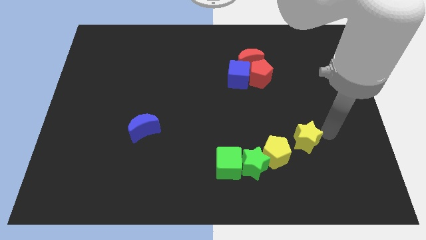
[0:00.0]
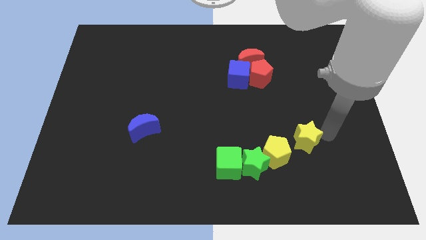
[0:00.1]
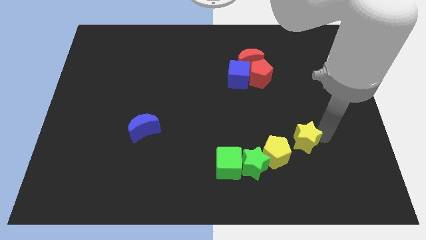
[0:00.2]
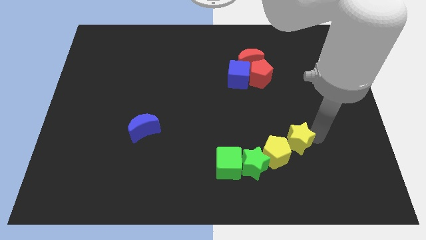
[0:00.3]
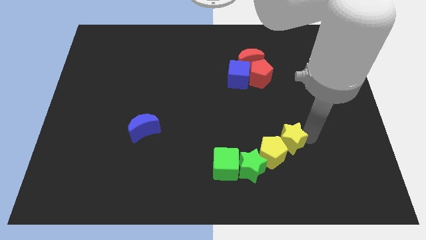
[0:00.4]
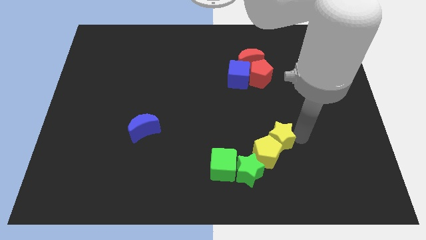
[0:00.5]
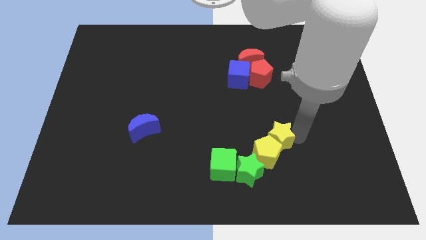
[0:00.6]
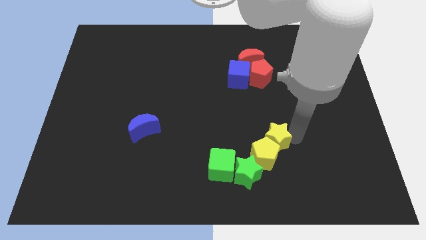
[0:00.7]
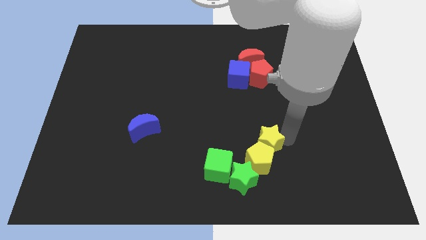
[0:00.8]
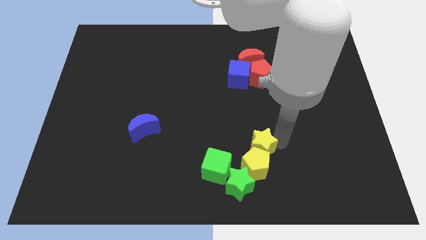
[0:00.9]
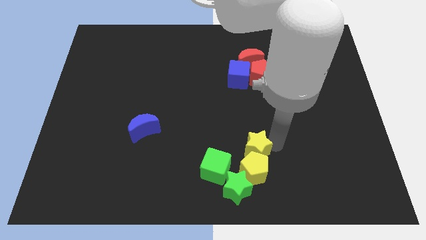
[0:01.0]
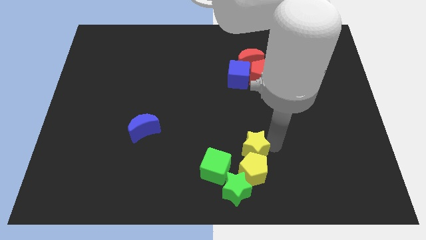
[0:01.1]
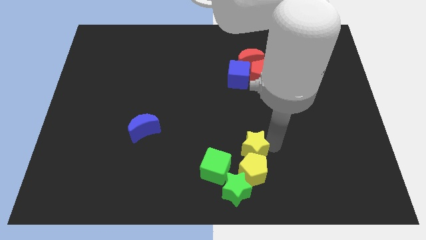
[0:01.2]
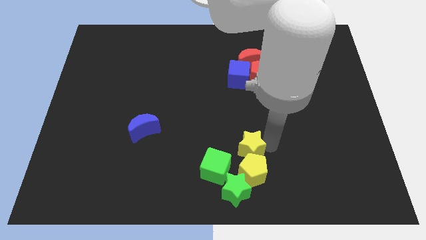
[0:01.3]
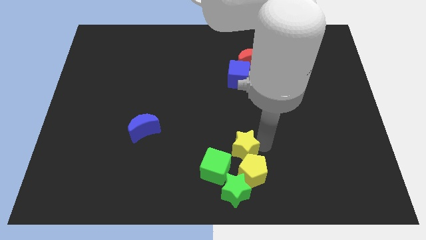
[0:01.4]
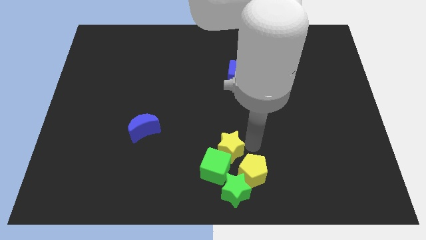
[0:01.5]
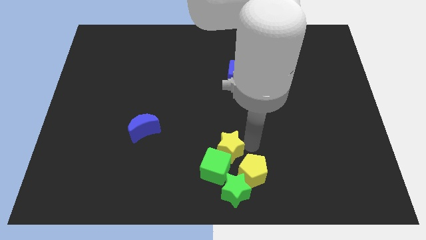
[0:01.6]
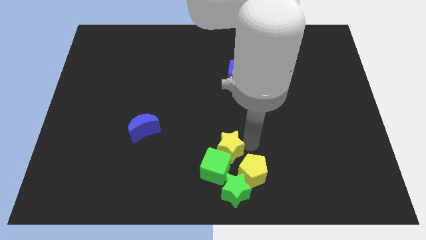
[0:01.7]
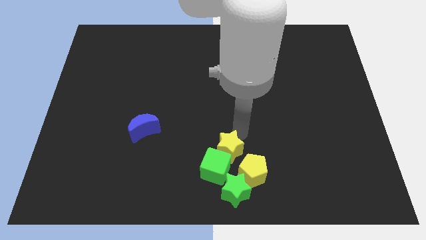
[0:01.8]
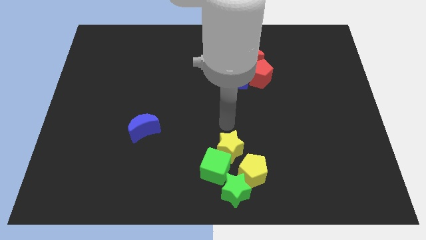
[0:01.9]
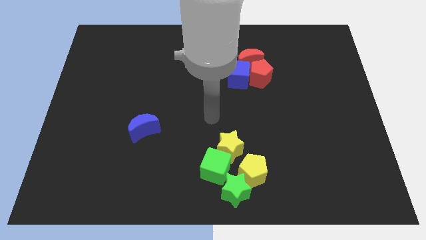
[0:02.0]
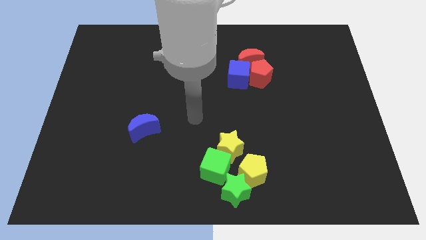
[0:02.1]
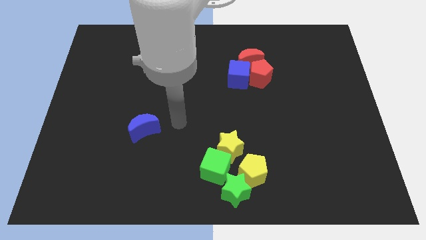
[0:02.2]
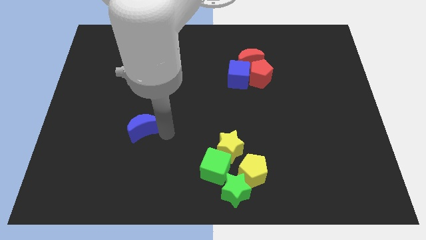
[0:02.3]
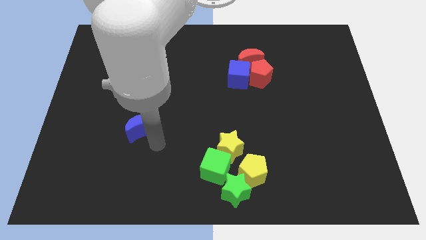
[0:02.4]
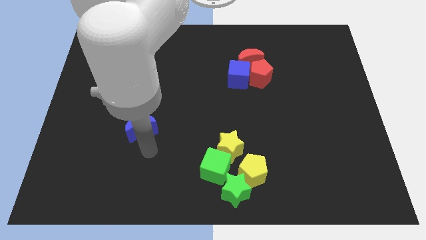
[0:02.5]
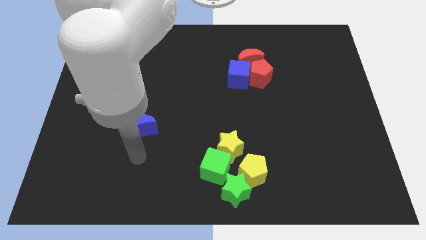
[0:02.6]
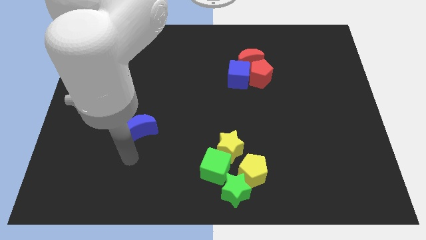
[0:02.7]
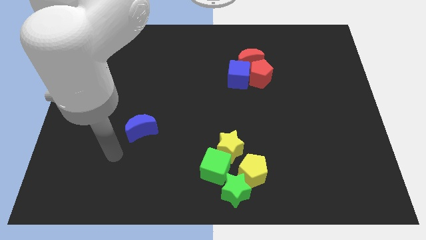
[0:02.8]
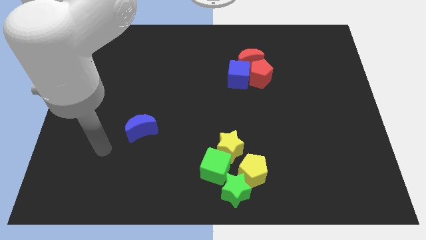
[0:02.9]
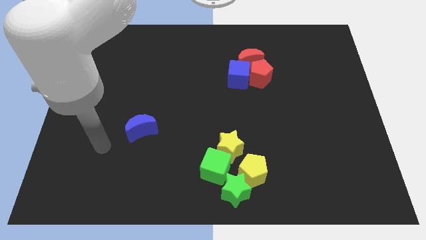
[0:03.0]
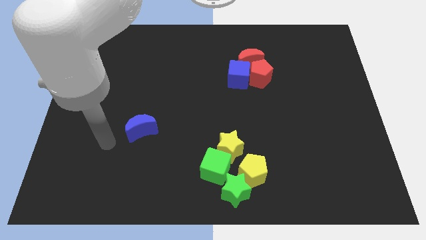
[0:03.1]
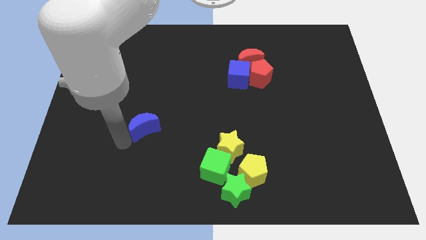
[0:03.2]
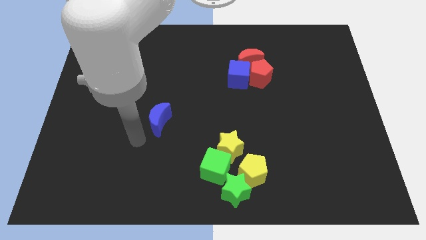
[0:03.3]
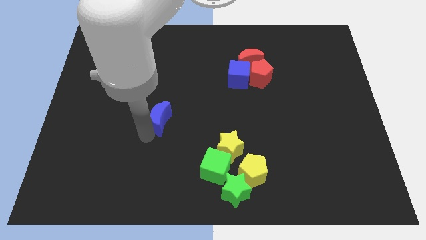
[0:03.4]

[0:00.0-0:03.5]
place the yellow star diagonal to the green cube

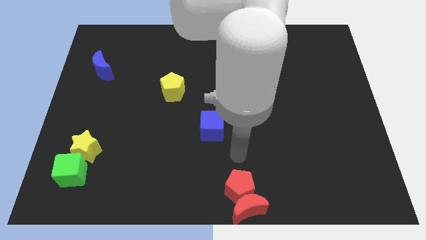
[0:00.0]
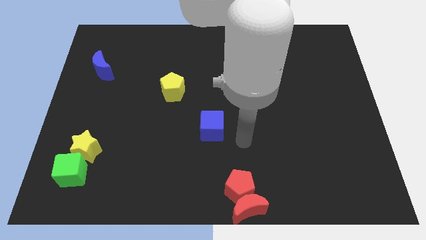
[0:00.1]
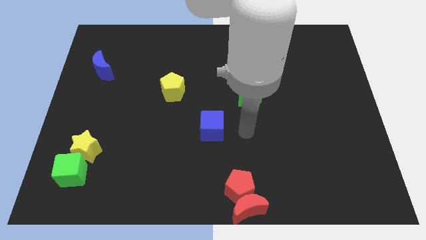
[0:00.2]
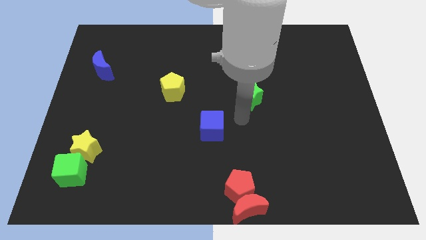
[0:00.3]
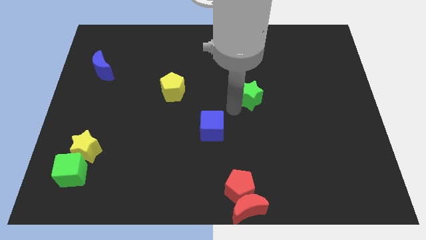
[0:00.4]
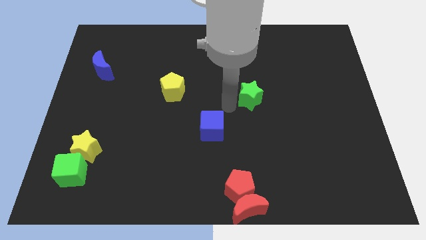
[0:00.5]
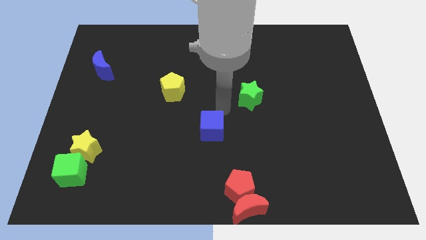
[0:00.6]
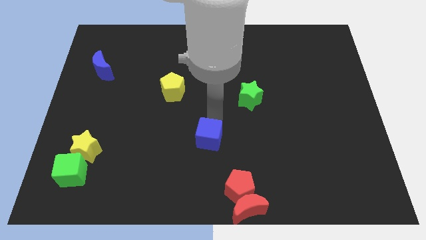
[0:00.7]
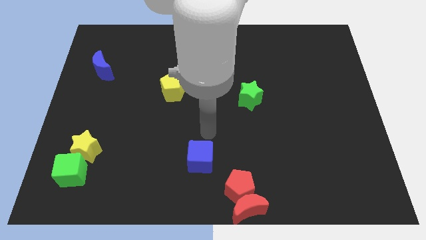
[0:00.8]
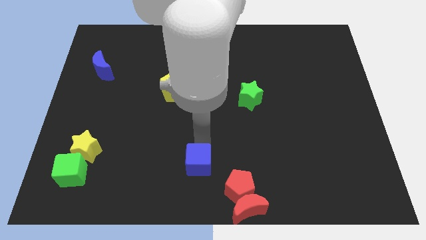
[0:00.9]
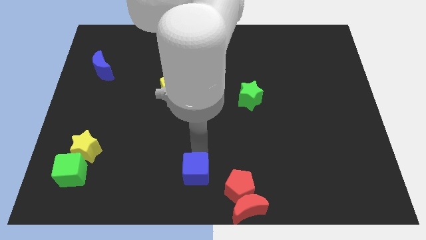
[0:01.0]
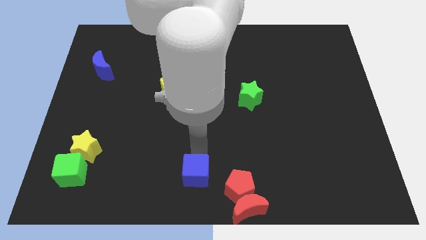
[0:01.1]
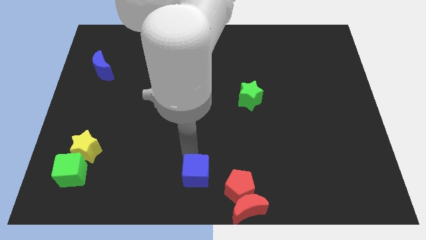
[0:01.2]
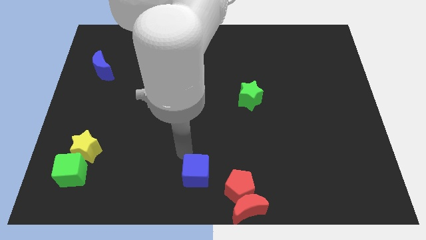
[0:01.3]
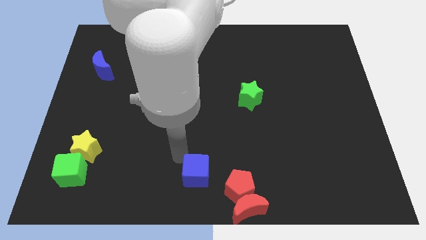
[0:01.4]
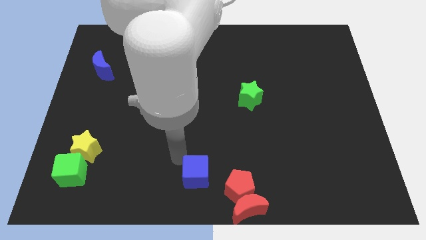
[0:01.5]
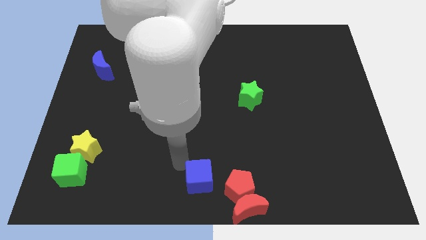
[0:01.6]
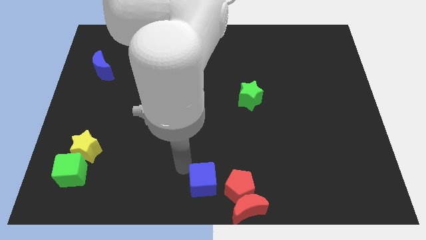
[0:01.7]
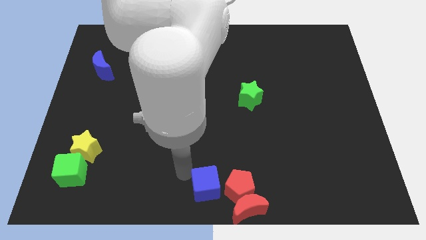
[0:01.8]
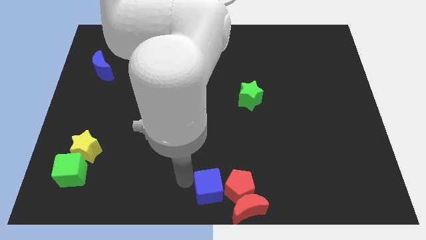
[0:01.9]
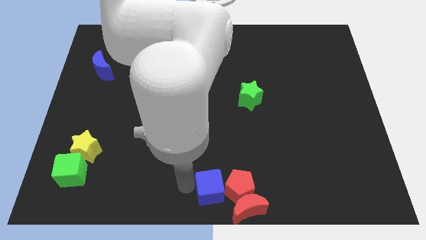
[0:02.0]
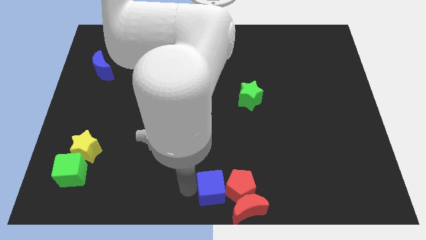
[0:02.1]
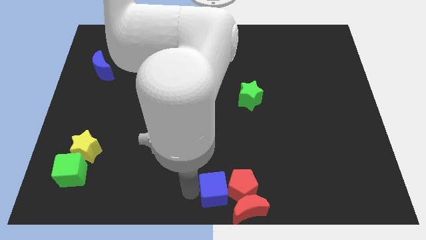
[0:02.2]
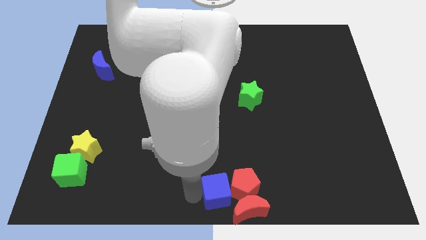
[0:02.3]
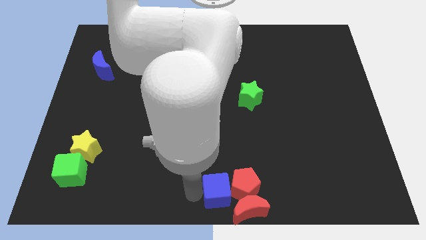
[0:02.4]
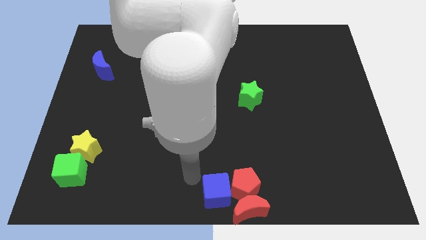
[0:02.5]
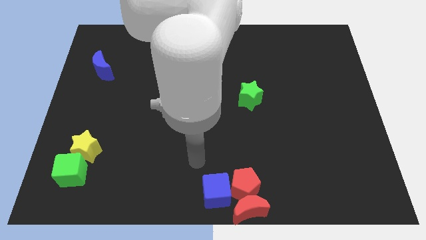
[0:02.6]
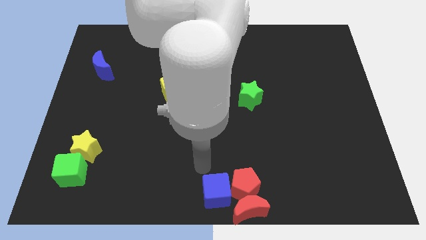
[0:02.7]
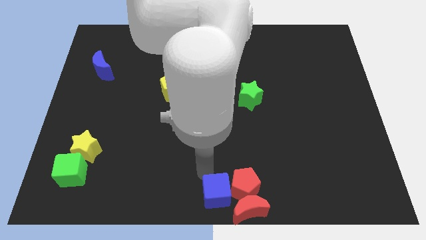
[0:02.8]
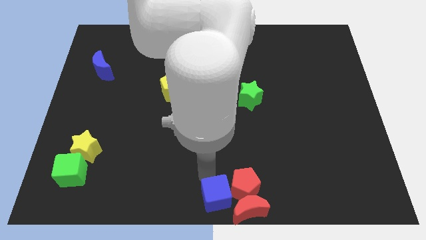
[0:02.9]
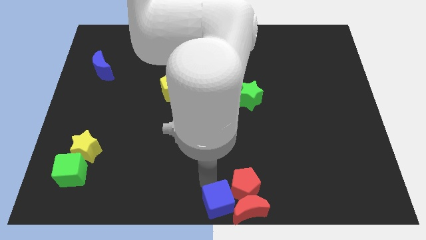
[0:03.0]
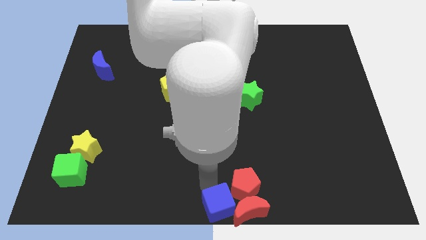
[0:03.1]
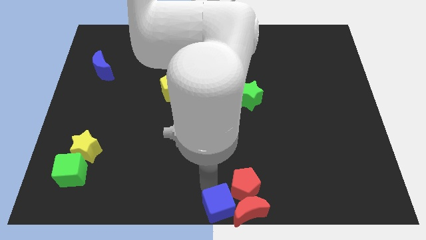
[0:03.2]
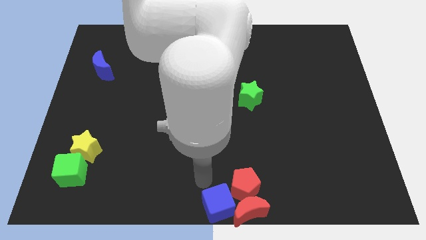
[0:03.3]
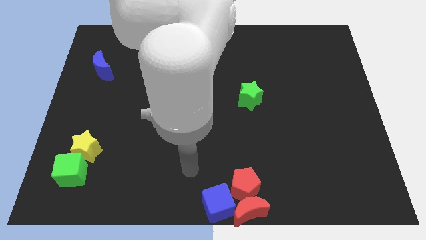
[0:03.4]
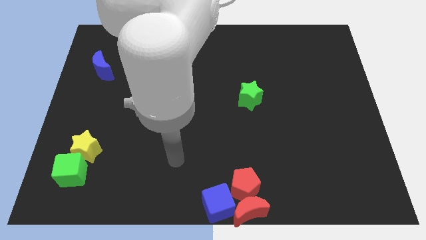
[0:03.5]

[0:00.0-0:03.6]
push the blue cube to the left of the red crescent

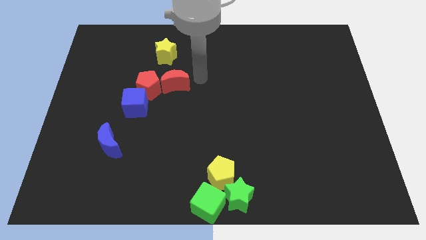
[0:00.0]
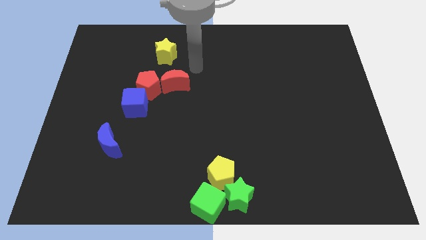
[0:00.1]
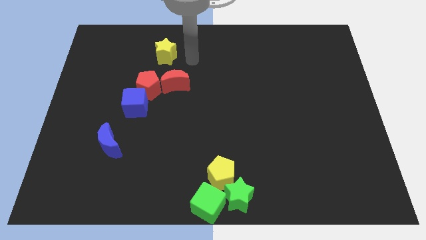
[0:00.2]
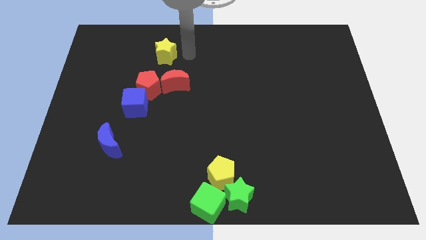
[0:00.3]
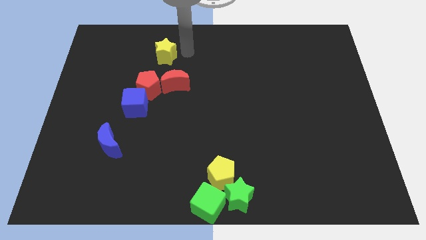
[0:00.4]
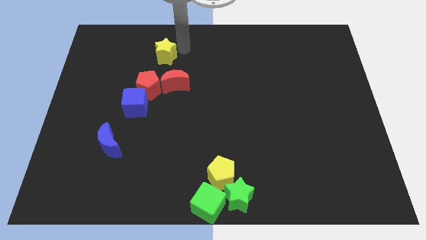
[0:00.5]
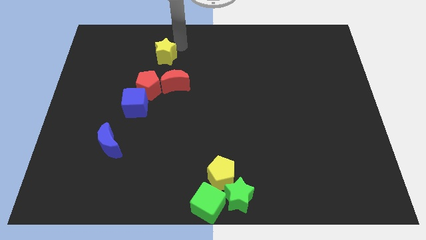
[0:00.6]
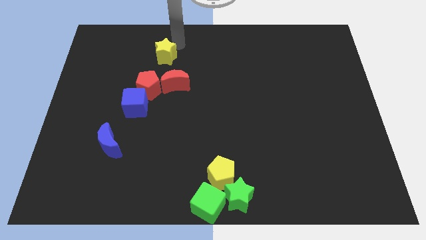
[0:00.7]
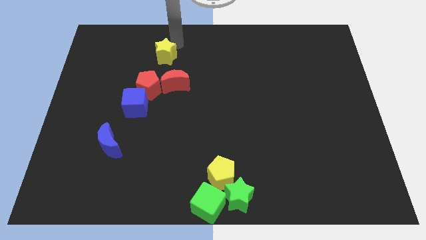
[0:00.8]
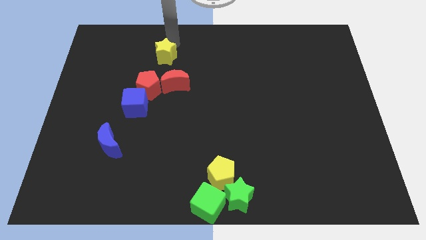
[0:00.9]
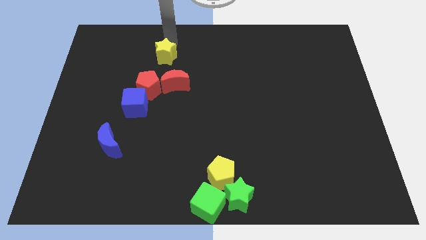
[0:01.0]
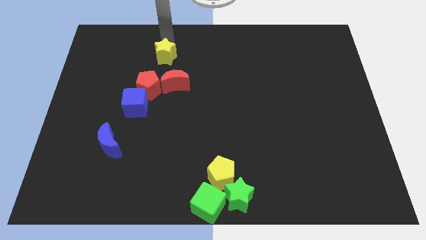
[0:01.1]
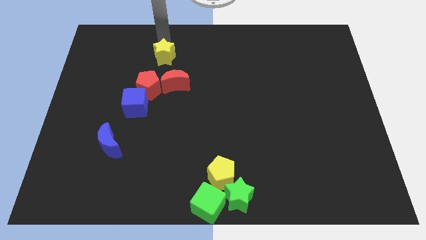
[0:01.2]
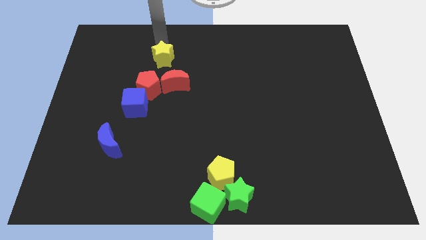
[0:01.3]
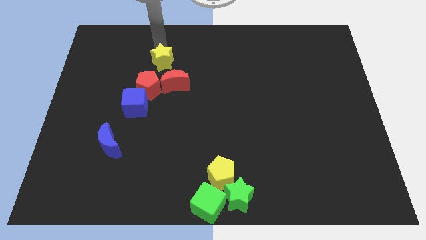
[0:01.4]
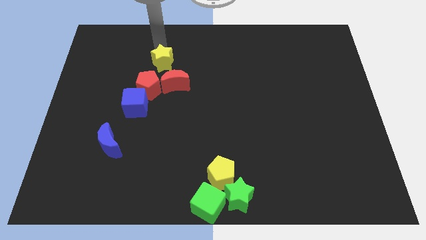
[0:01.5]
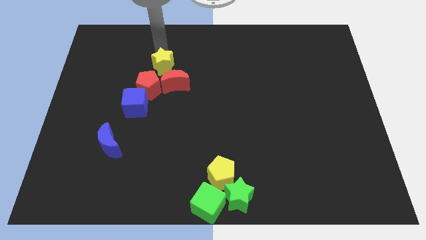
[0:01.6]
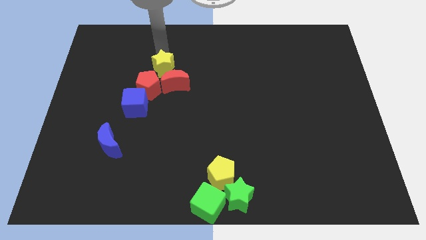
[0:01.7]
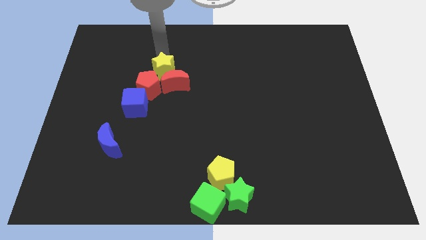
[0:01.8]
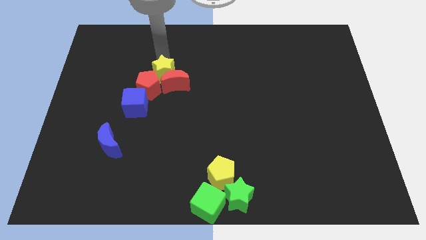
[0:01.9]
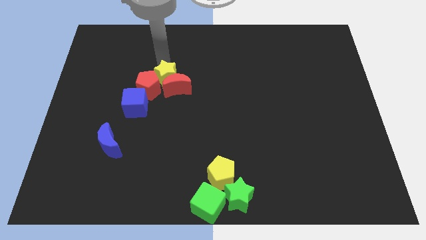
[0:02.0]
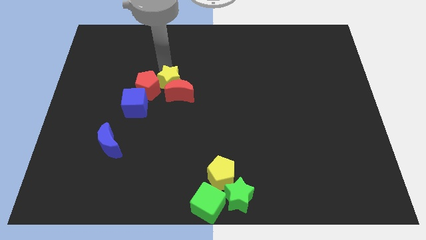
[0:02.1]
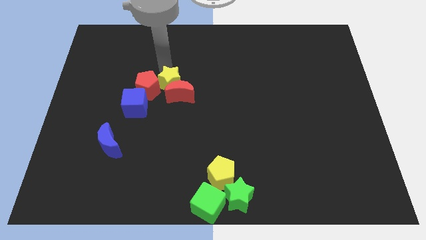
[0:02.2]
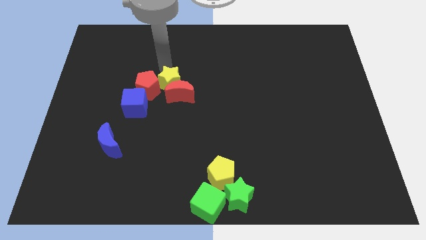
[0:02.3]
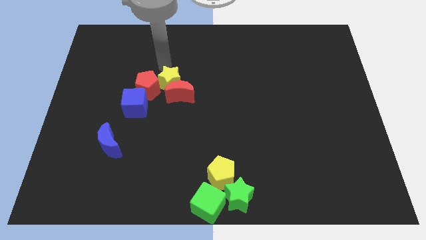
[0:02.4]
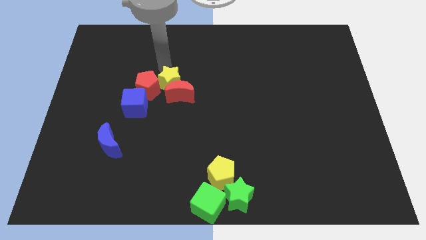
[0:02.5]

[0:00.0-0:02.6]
push the yellow star into the red crescent from the top
